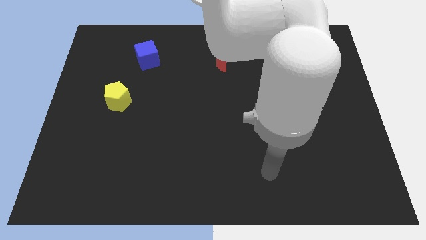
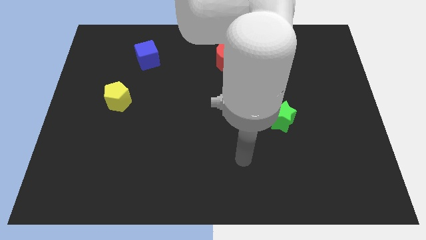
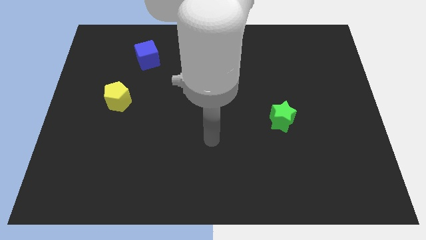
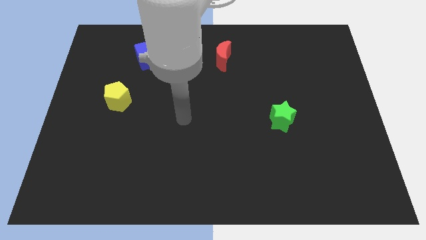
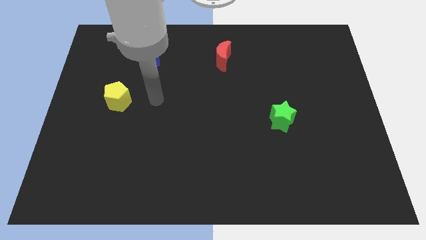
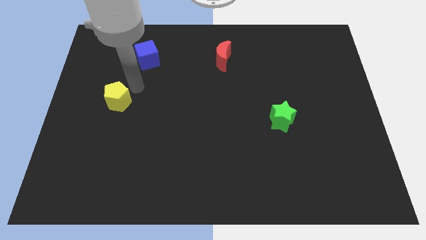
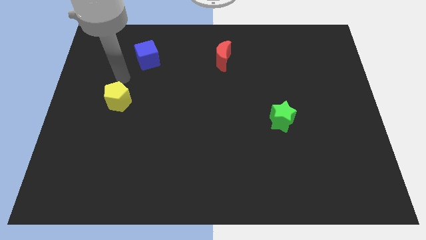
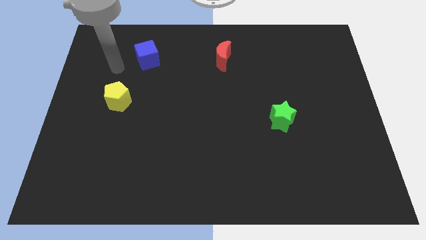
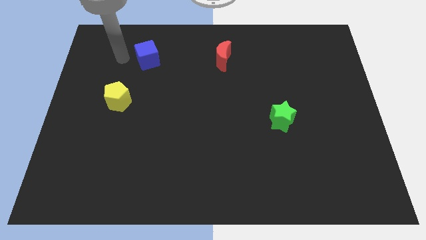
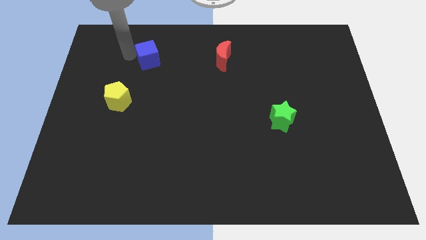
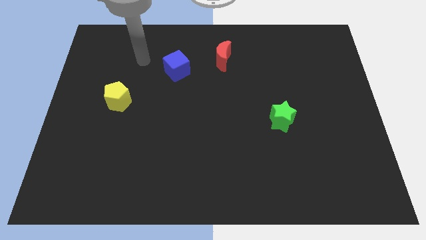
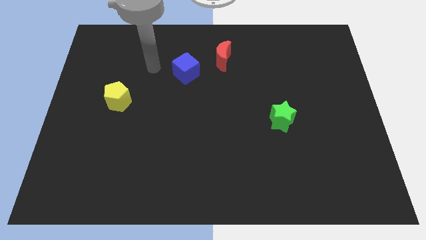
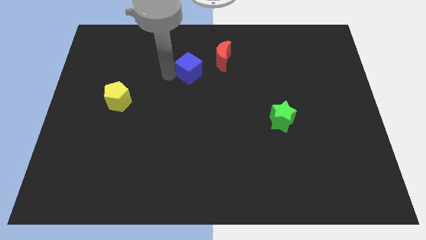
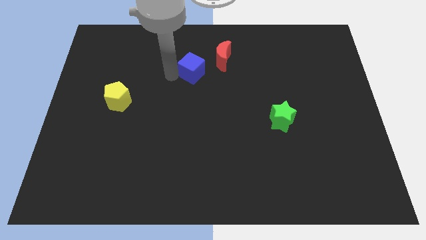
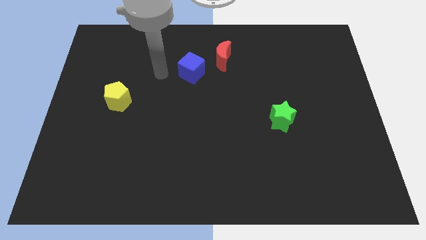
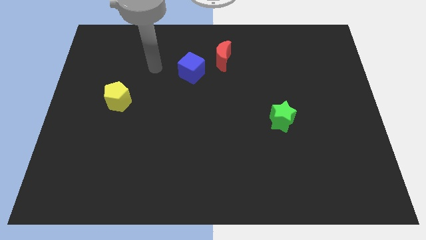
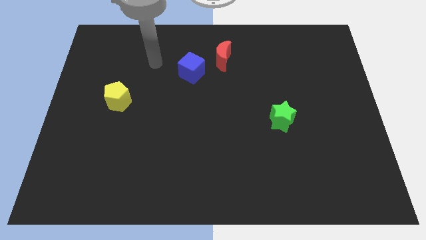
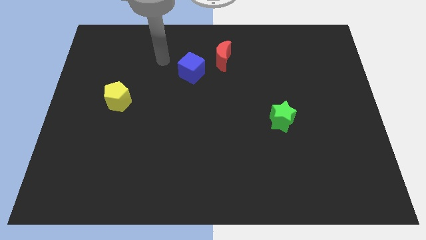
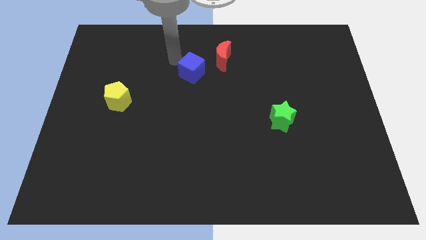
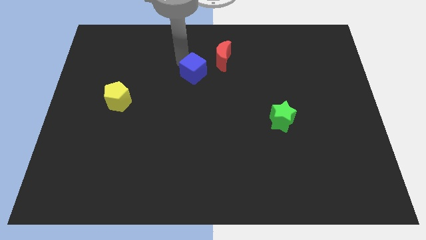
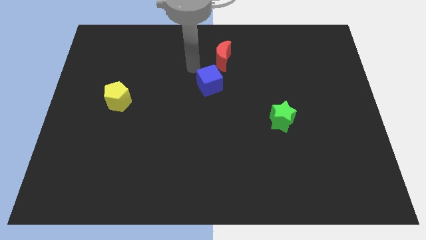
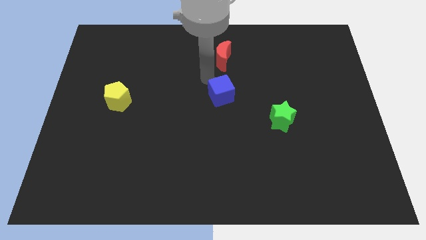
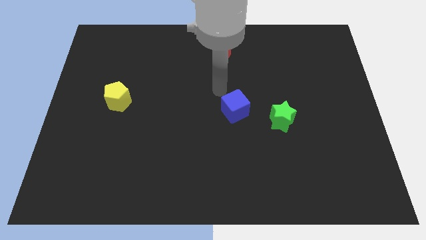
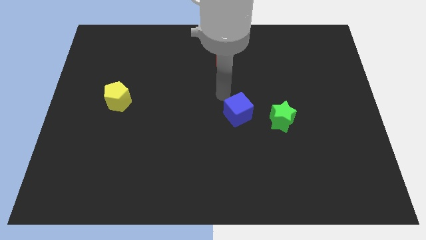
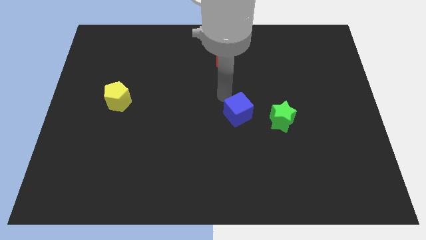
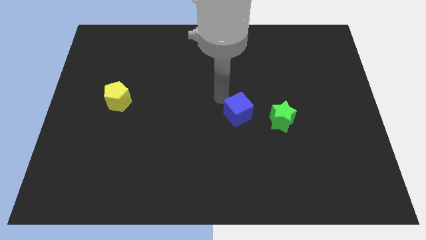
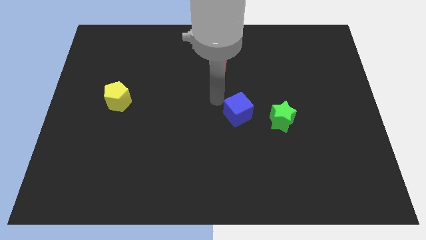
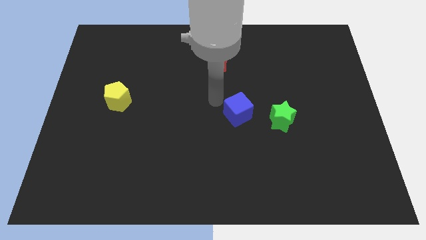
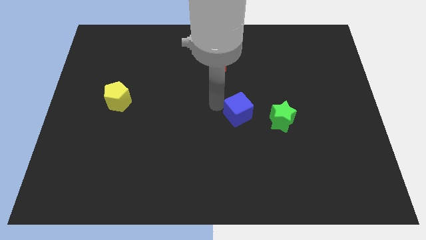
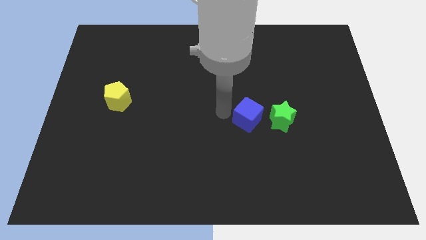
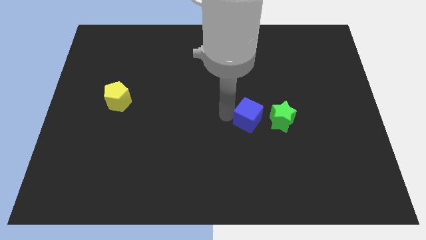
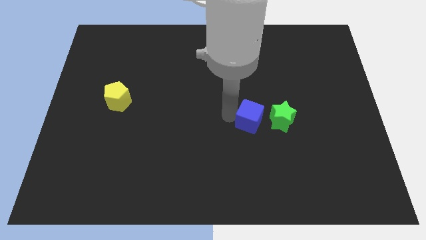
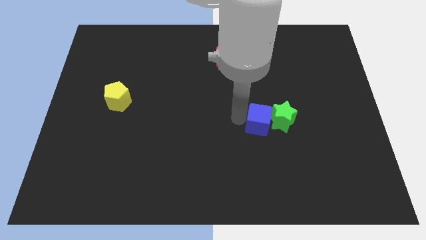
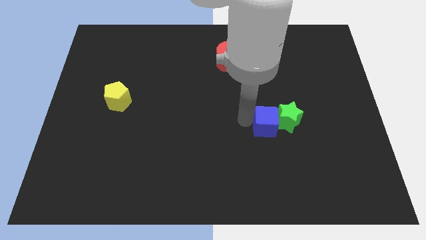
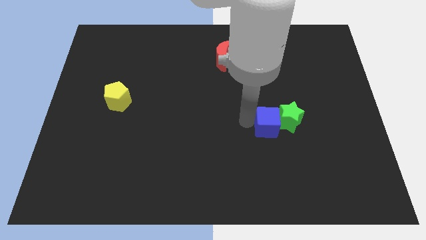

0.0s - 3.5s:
slide the cube next to the green star

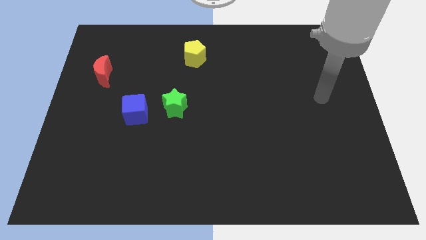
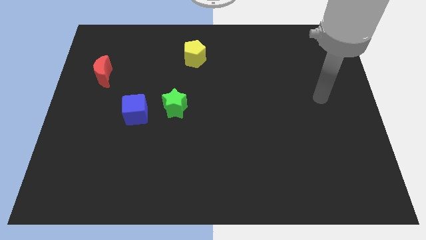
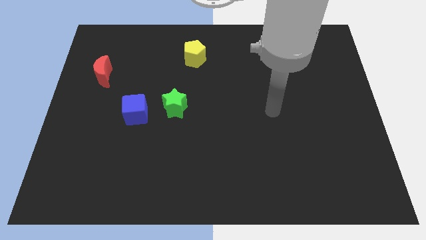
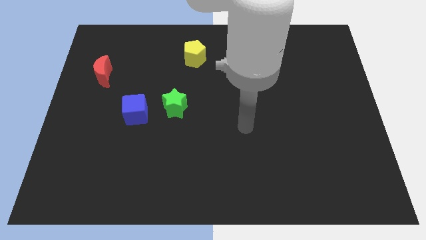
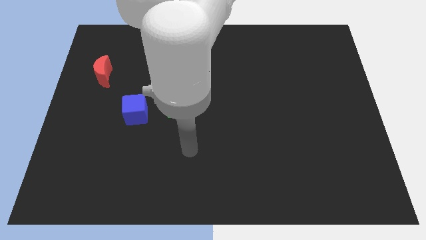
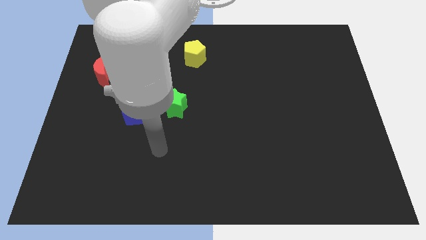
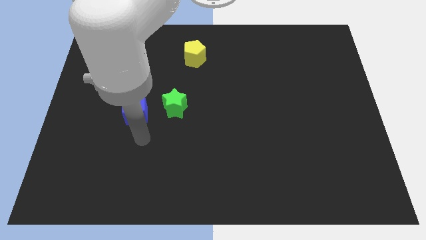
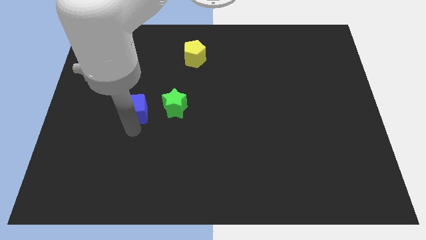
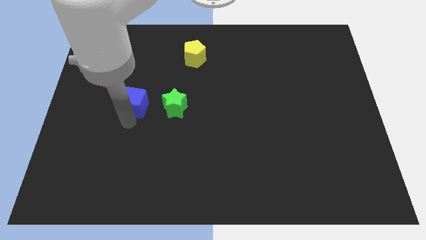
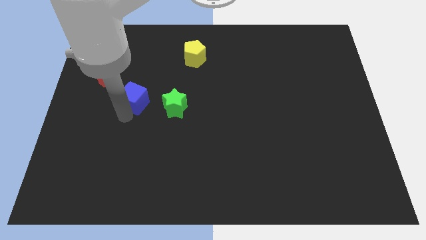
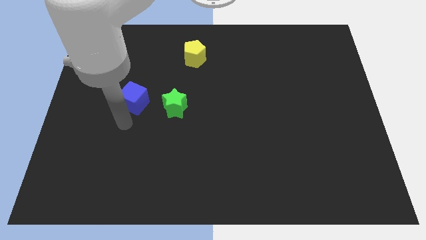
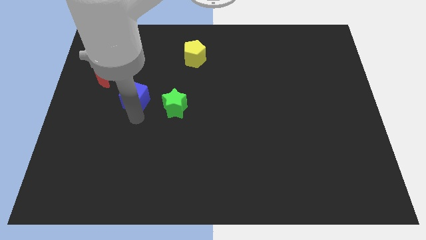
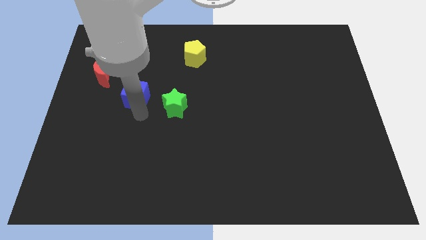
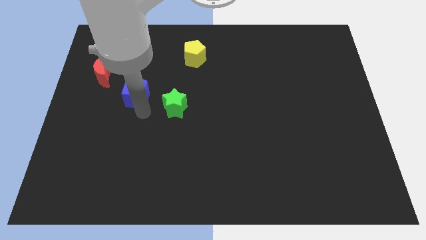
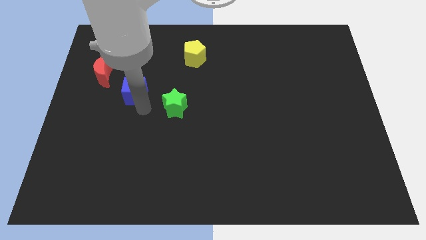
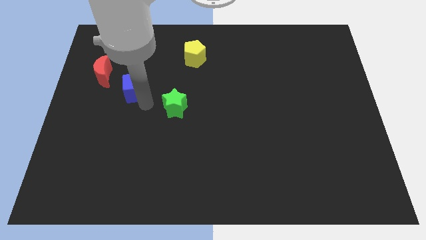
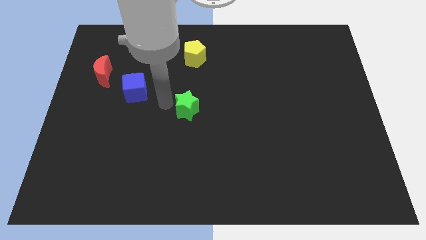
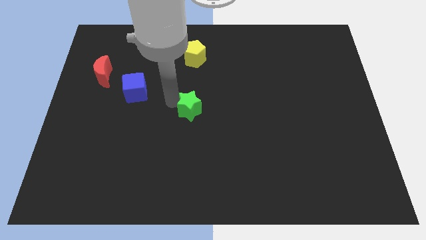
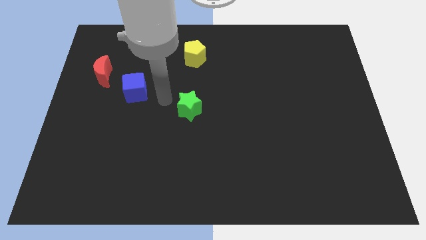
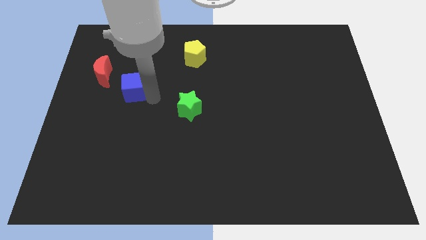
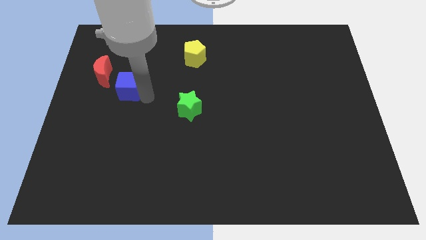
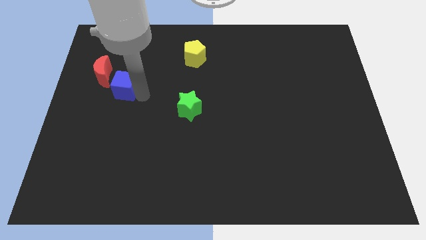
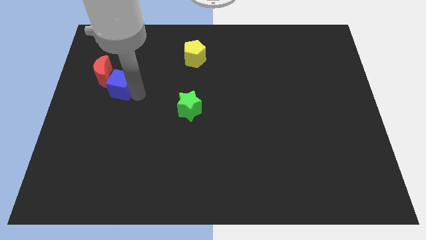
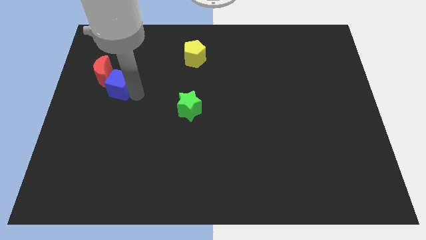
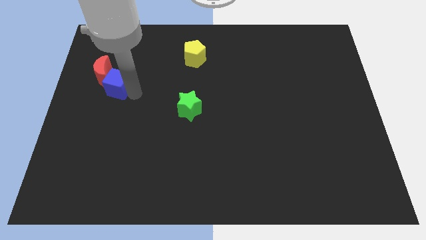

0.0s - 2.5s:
push the blue block next to the red block

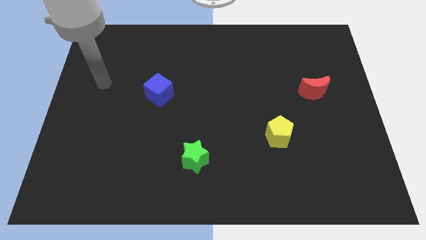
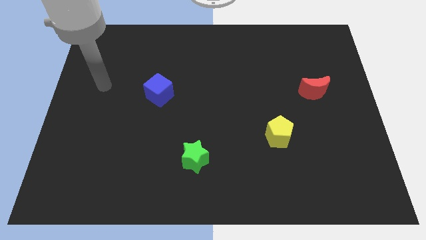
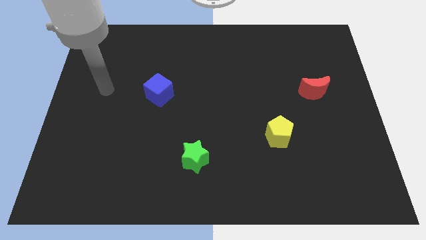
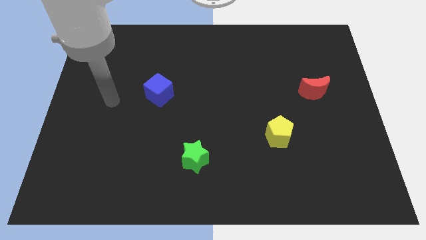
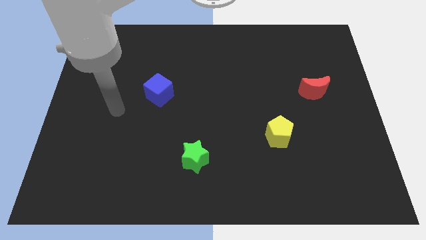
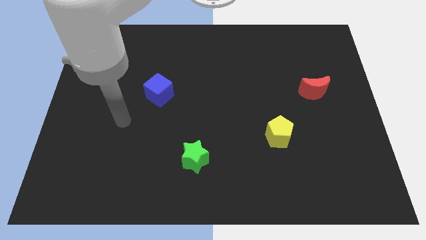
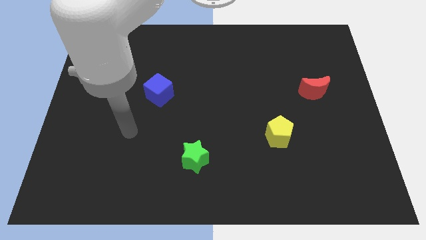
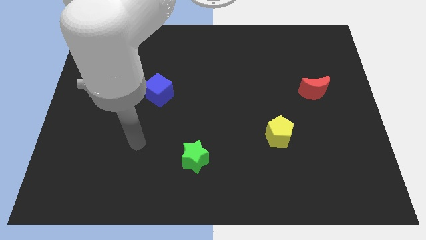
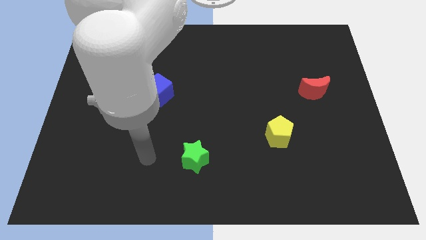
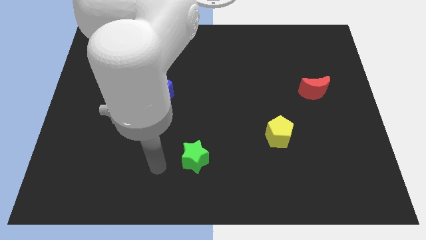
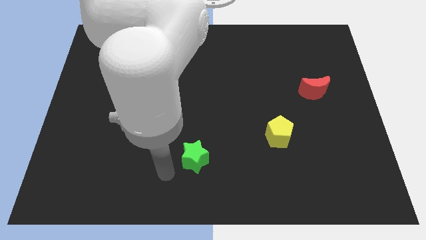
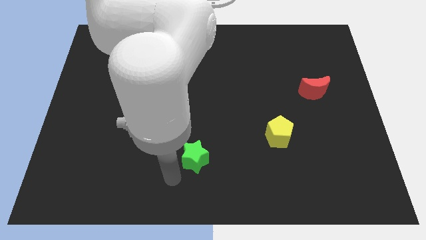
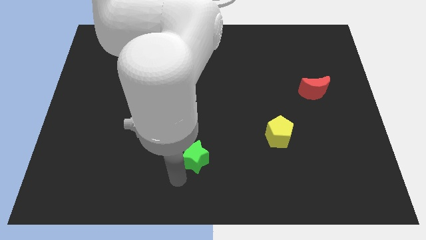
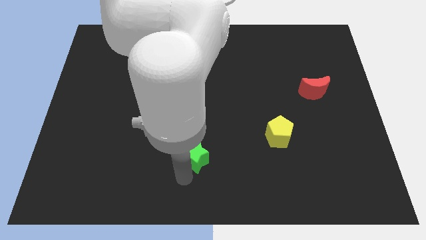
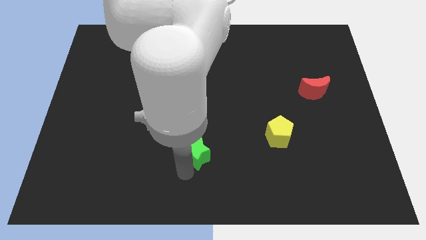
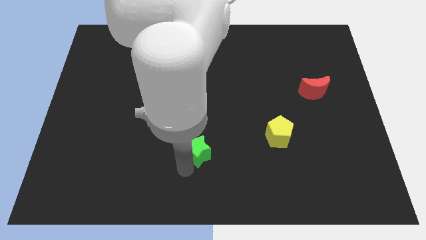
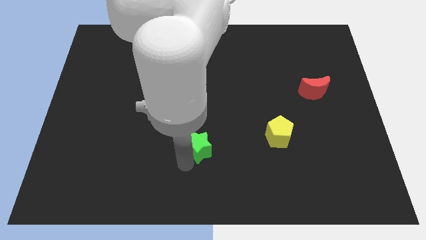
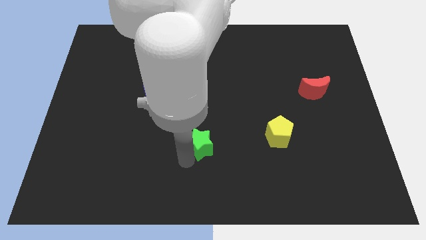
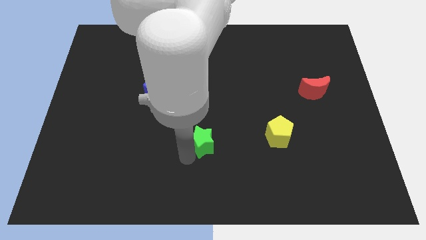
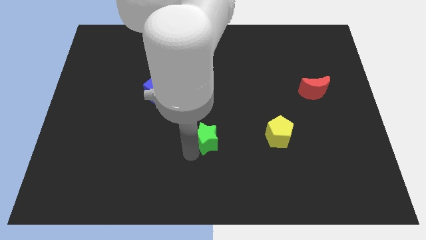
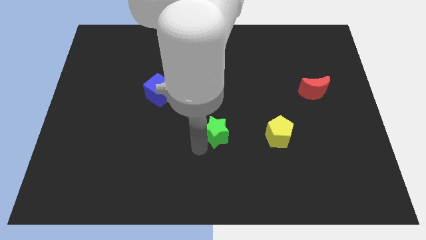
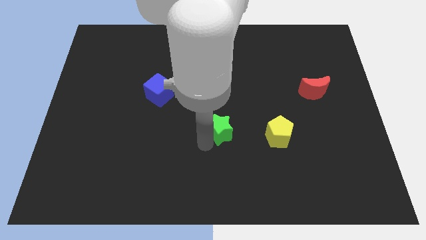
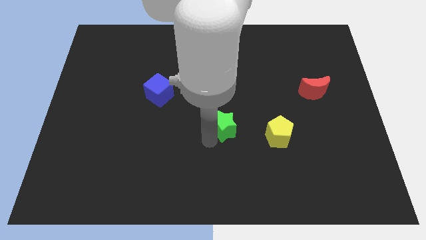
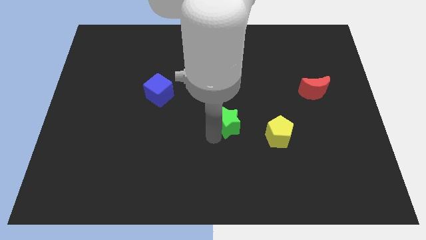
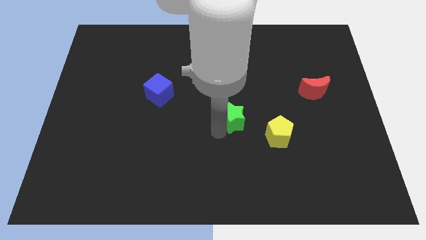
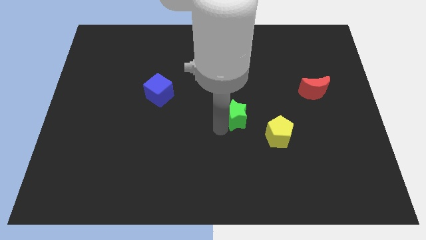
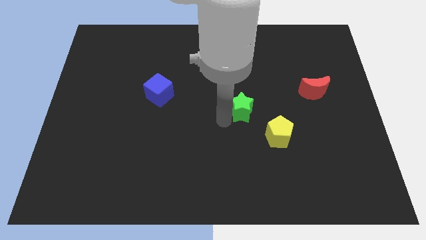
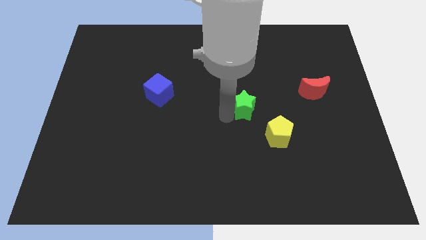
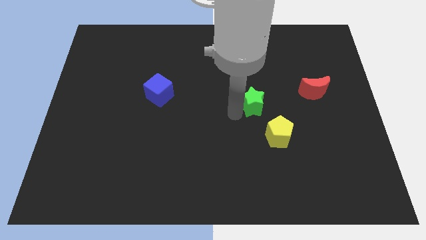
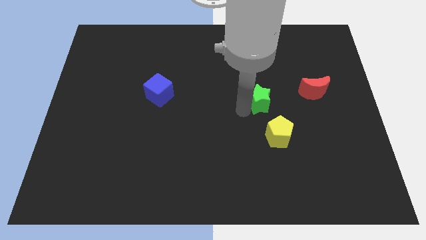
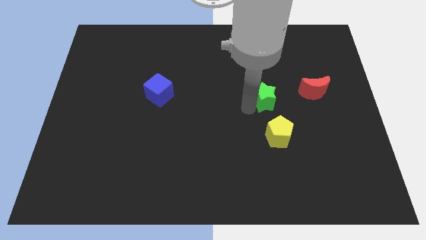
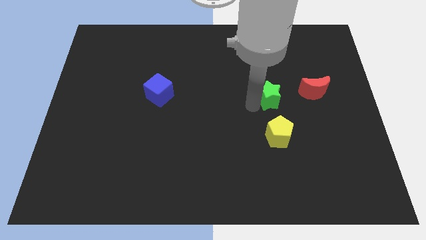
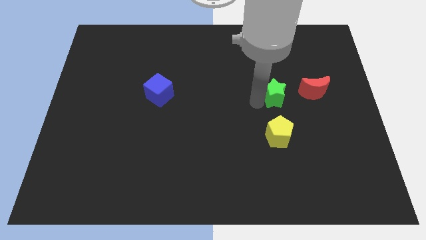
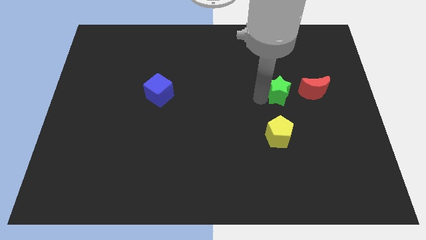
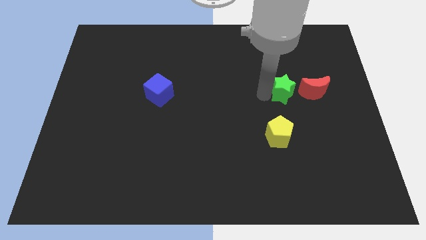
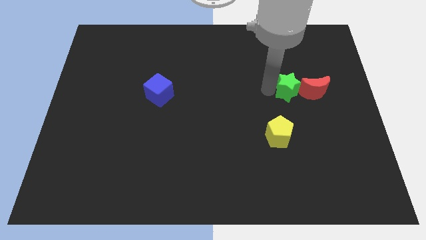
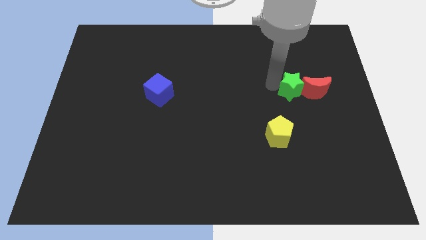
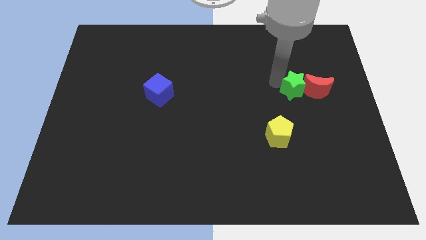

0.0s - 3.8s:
slide the green star towards the red moon
